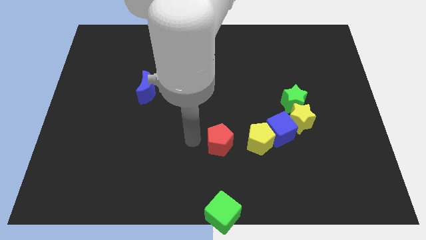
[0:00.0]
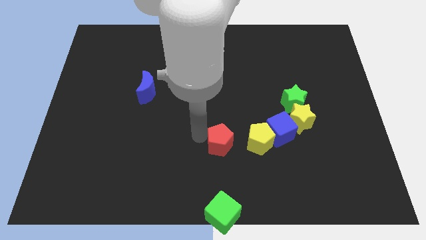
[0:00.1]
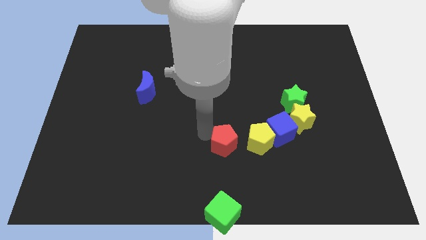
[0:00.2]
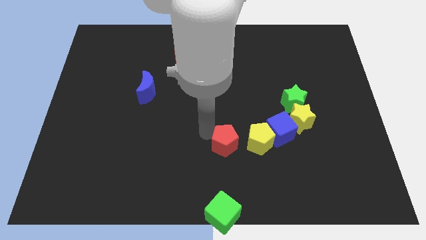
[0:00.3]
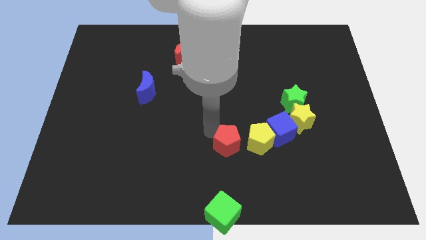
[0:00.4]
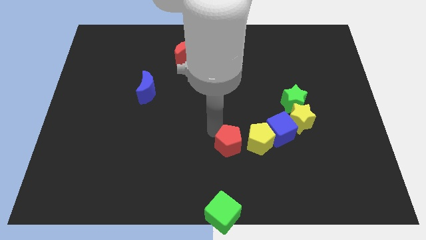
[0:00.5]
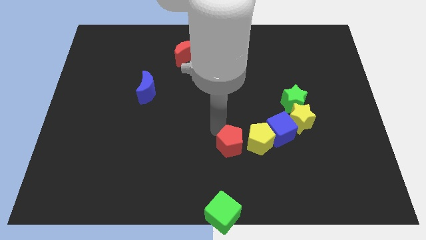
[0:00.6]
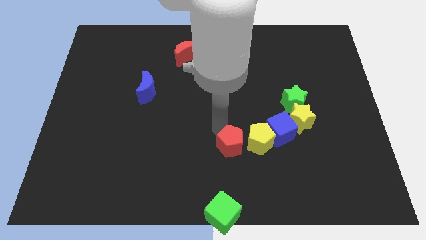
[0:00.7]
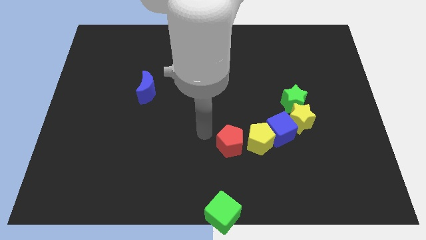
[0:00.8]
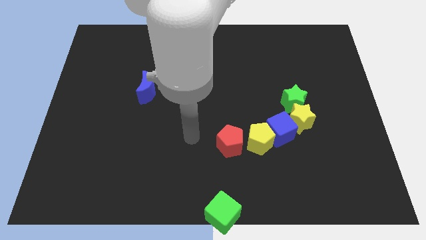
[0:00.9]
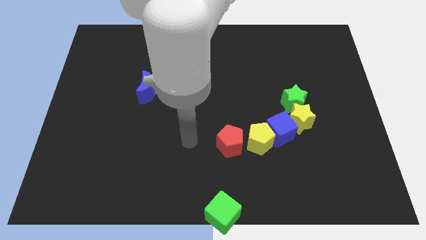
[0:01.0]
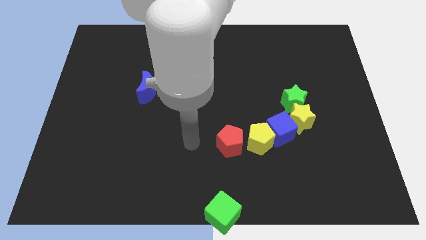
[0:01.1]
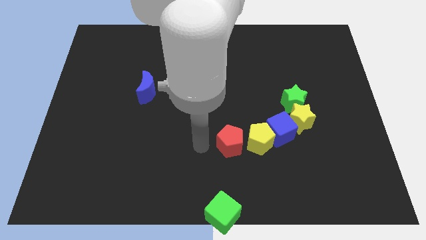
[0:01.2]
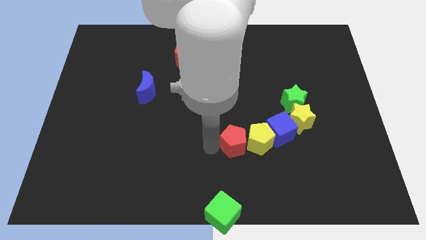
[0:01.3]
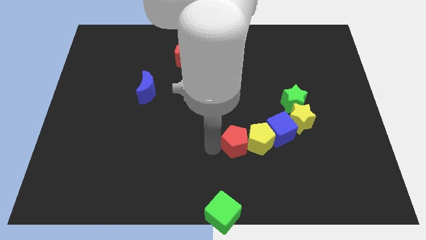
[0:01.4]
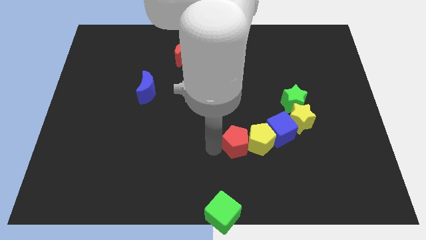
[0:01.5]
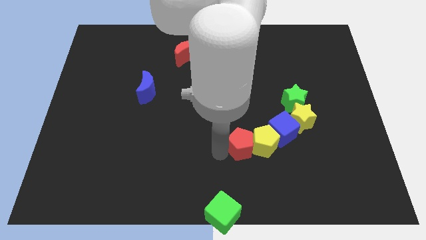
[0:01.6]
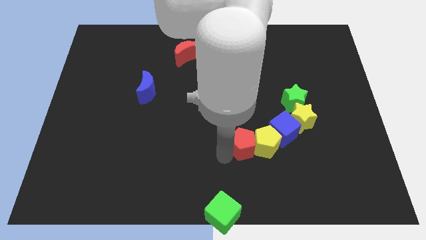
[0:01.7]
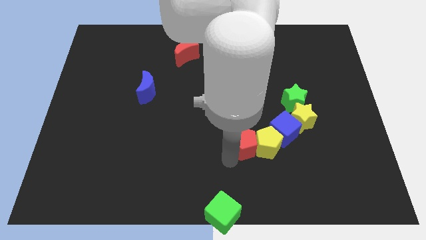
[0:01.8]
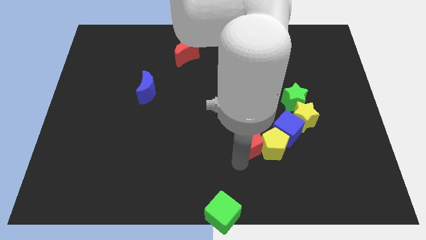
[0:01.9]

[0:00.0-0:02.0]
push the red pentagon into the group of blocks

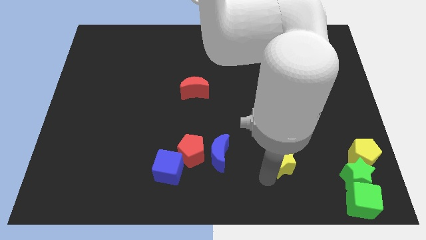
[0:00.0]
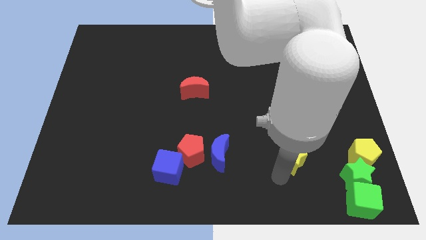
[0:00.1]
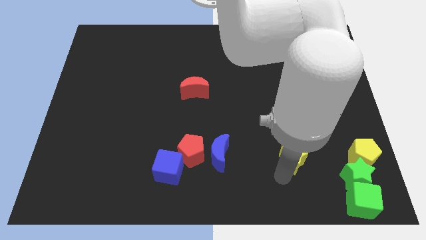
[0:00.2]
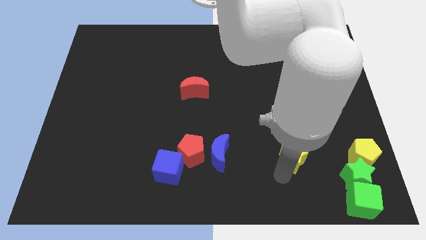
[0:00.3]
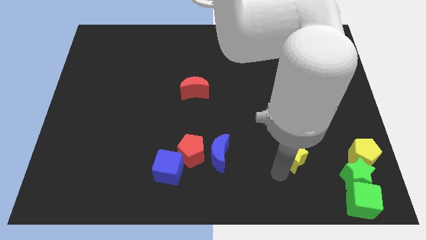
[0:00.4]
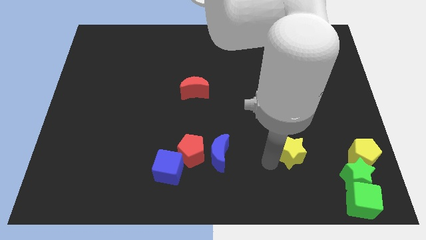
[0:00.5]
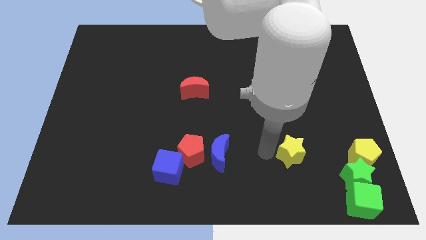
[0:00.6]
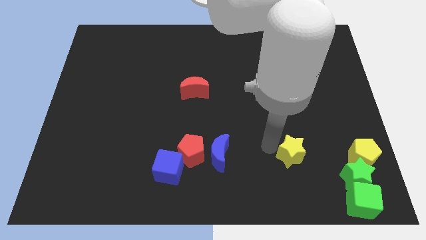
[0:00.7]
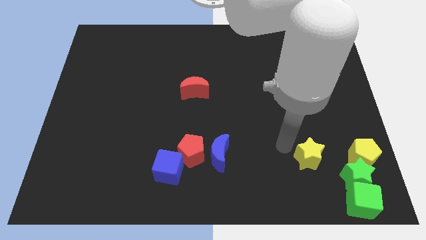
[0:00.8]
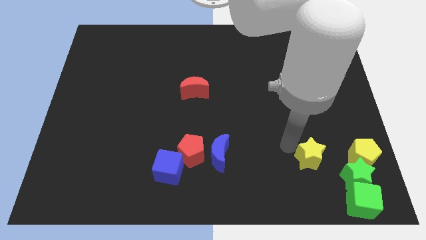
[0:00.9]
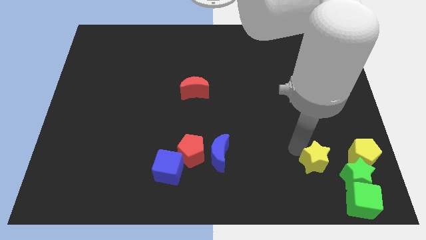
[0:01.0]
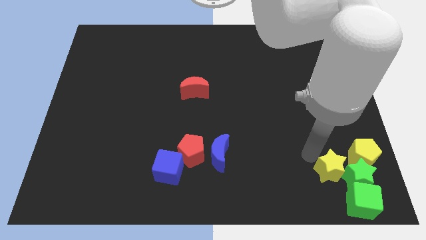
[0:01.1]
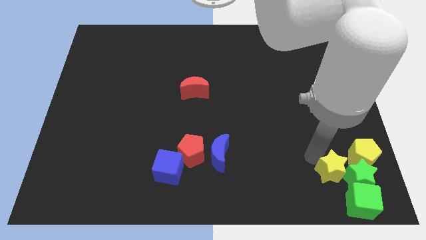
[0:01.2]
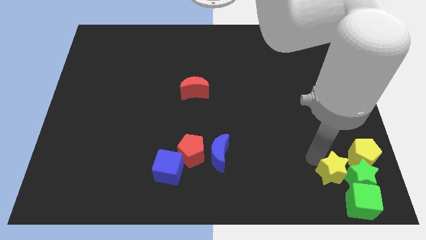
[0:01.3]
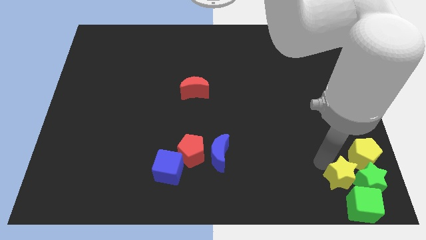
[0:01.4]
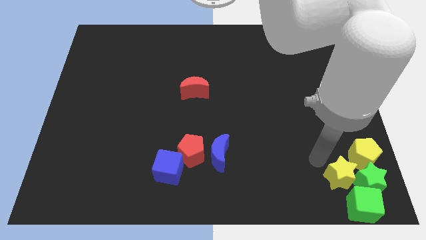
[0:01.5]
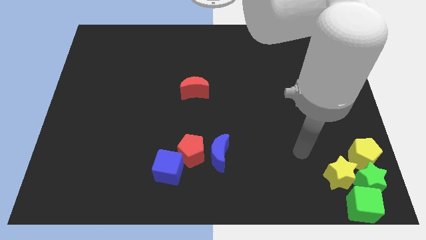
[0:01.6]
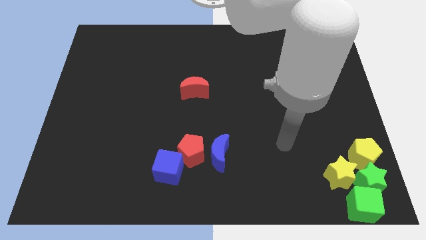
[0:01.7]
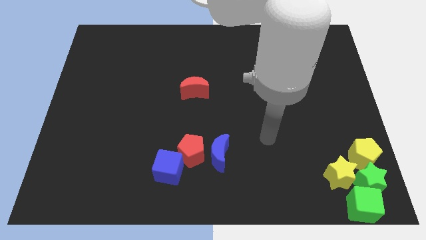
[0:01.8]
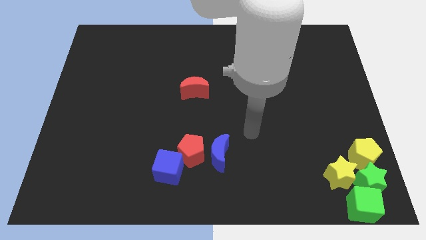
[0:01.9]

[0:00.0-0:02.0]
move yellow star close to the green star

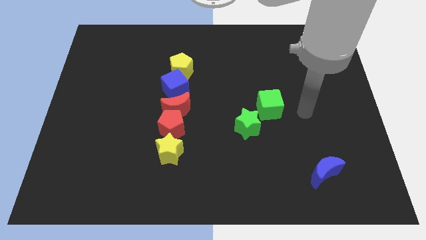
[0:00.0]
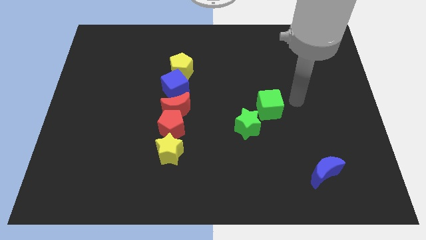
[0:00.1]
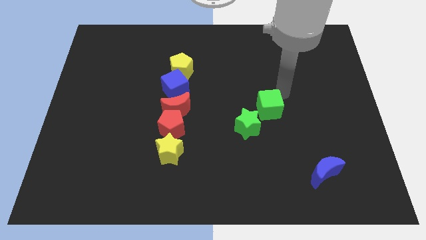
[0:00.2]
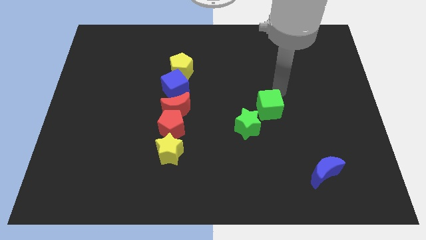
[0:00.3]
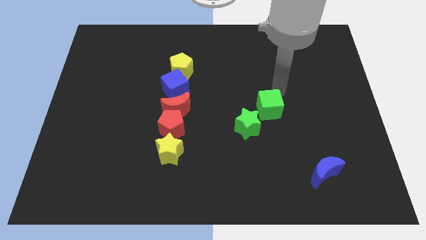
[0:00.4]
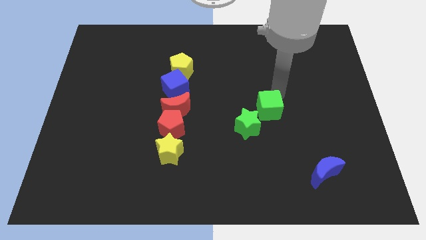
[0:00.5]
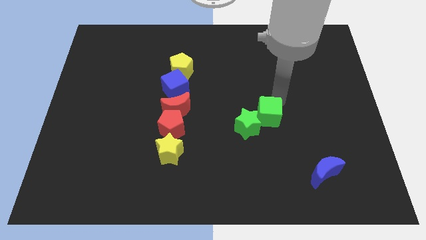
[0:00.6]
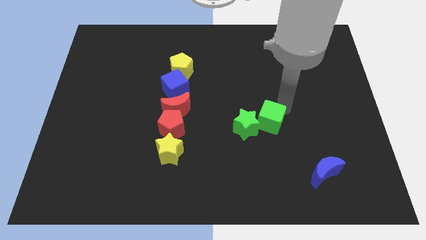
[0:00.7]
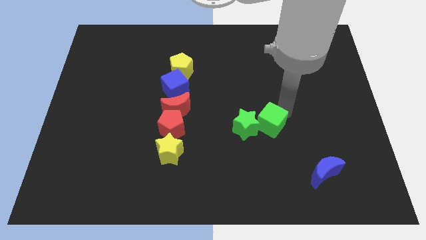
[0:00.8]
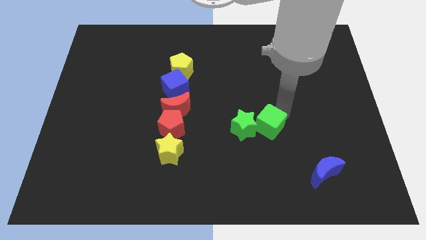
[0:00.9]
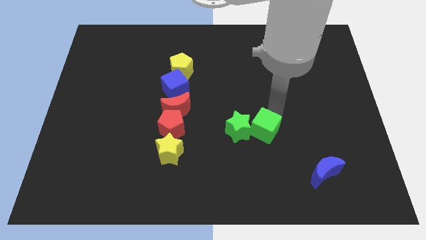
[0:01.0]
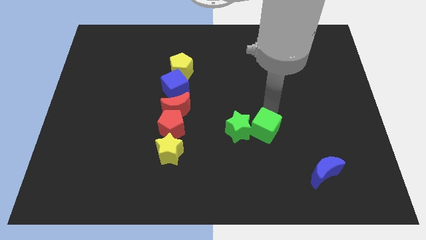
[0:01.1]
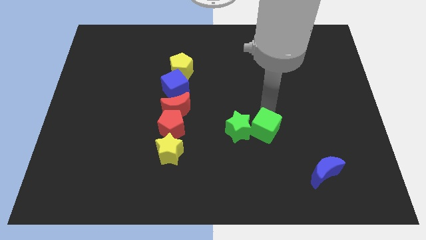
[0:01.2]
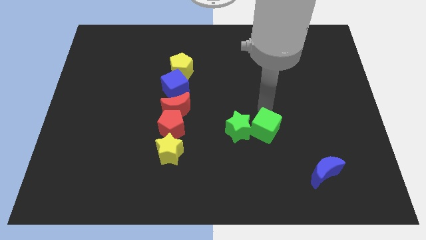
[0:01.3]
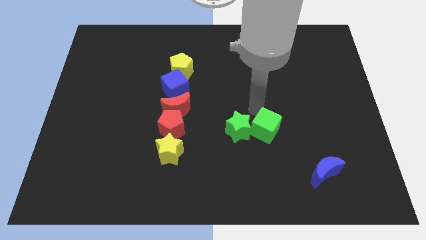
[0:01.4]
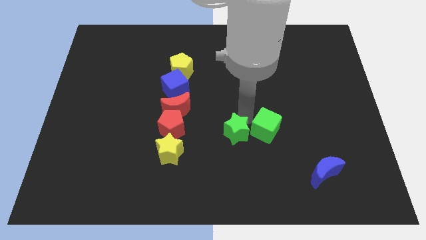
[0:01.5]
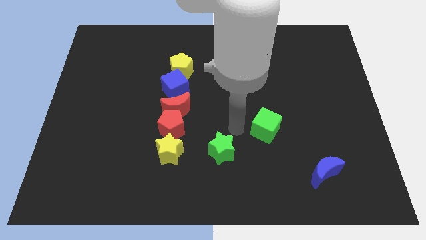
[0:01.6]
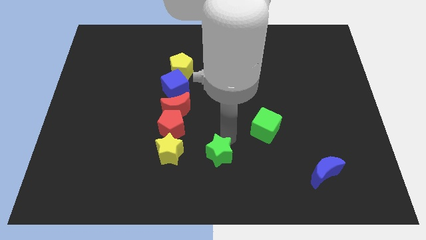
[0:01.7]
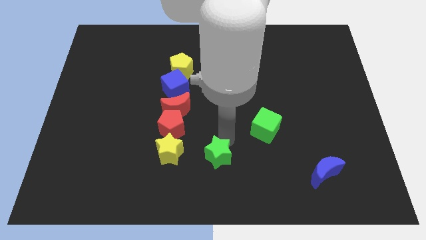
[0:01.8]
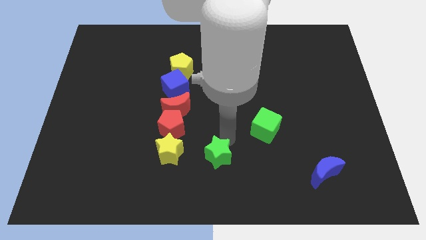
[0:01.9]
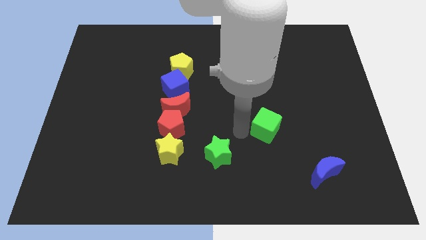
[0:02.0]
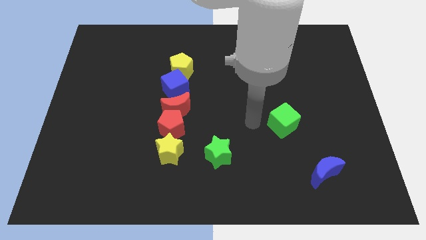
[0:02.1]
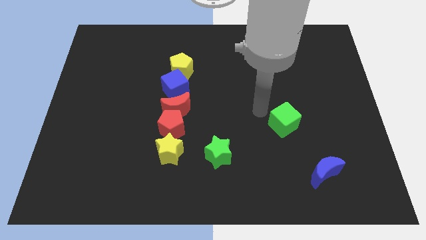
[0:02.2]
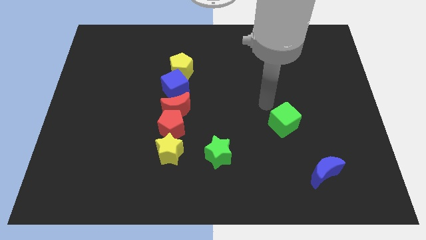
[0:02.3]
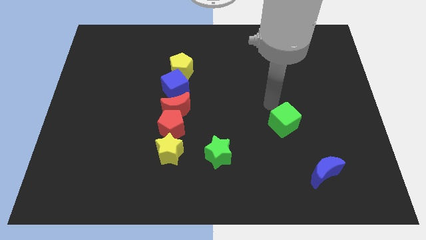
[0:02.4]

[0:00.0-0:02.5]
separate the green star and green cube

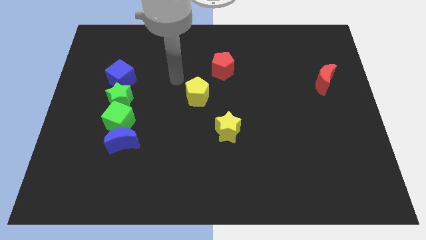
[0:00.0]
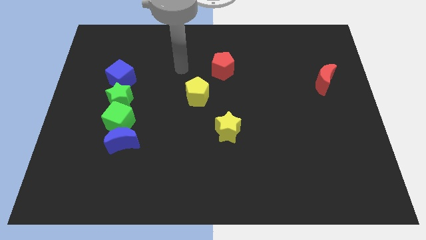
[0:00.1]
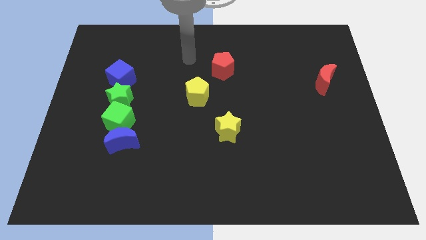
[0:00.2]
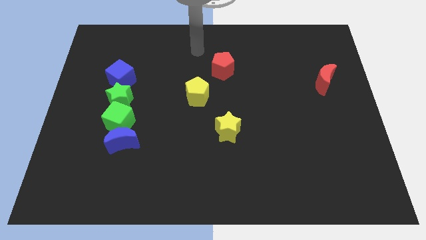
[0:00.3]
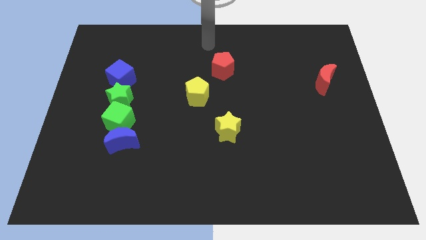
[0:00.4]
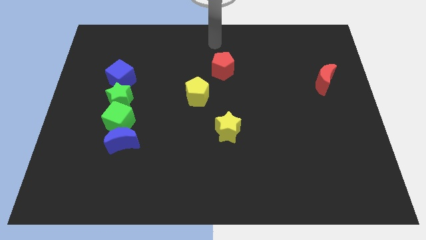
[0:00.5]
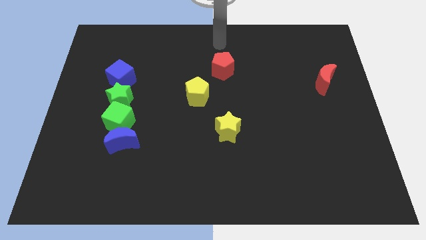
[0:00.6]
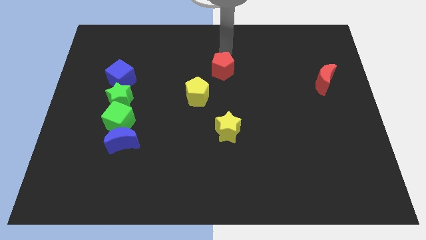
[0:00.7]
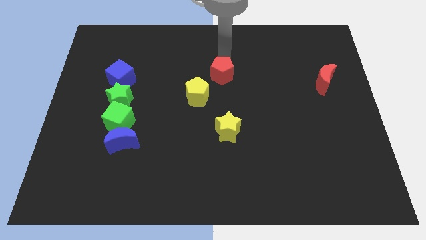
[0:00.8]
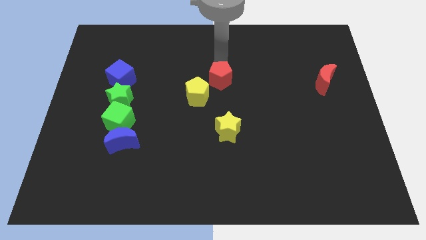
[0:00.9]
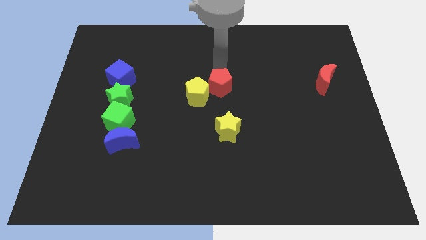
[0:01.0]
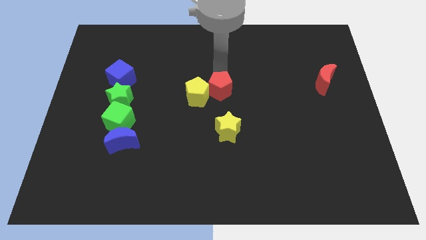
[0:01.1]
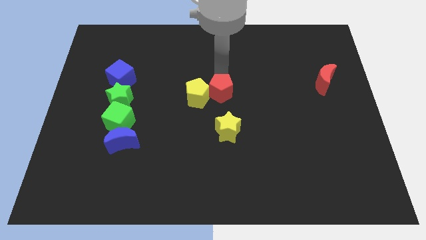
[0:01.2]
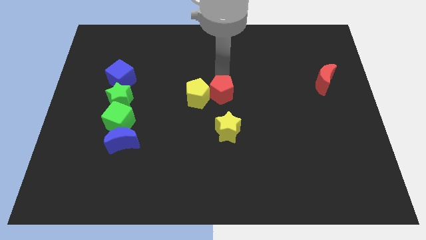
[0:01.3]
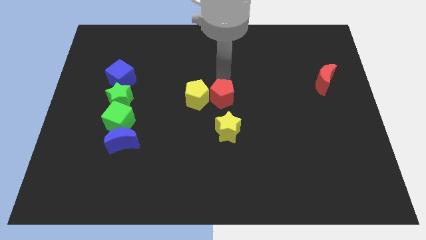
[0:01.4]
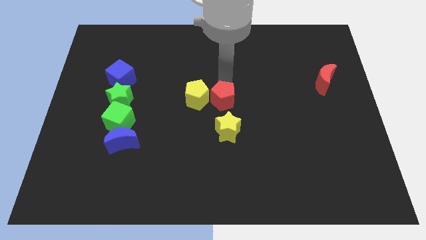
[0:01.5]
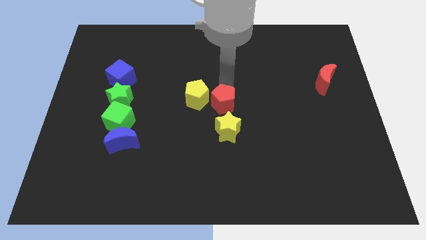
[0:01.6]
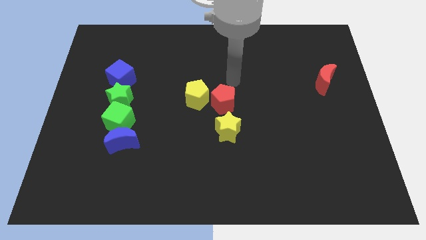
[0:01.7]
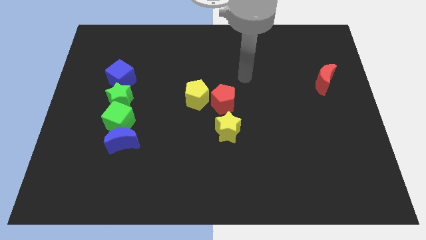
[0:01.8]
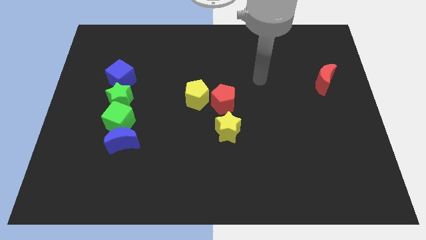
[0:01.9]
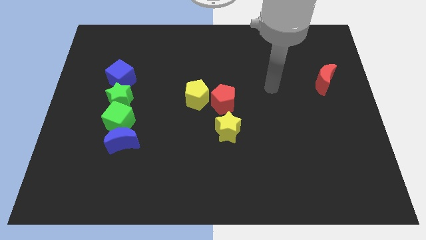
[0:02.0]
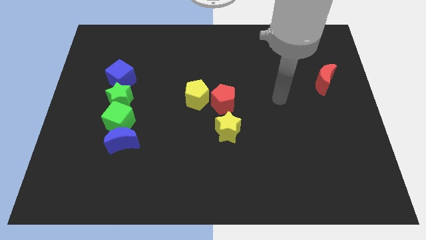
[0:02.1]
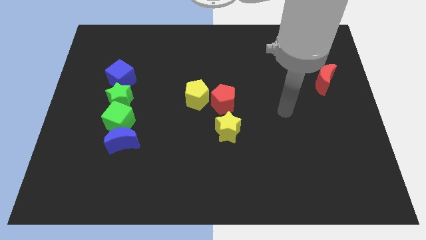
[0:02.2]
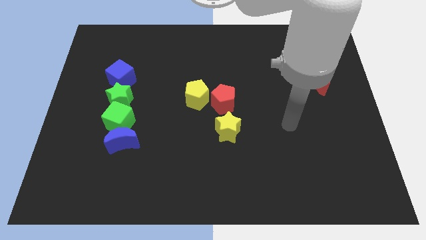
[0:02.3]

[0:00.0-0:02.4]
place the red pentagon to the top of yellow star
